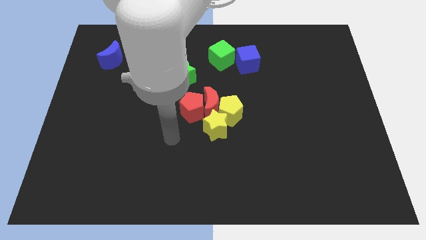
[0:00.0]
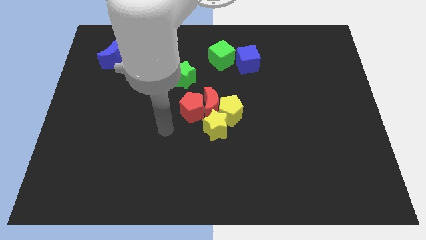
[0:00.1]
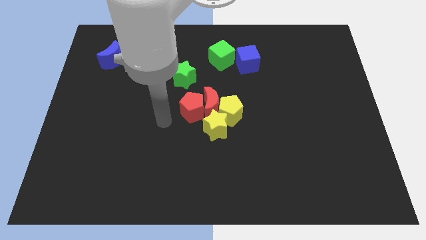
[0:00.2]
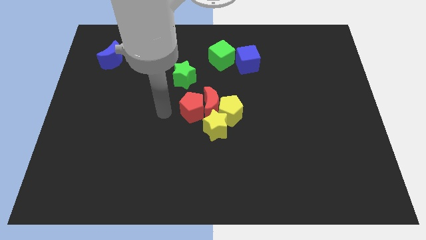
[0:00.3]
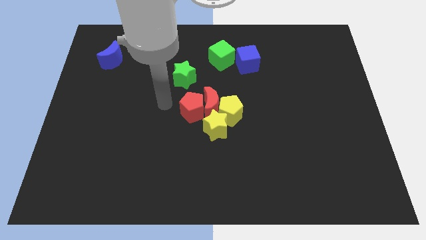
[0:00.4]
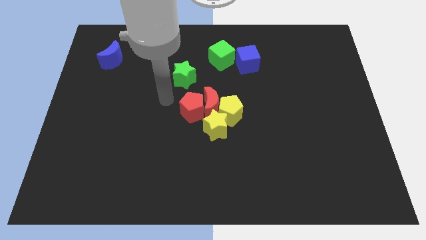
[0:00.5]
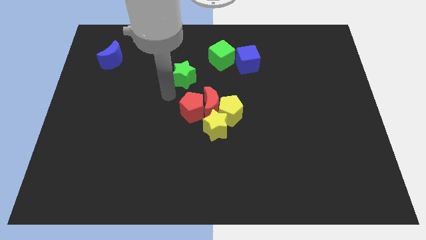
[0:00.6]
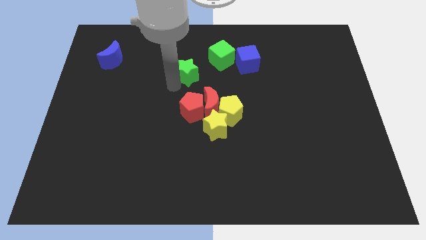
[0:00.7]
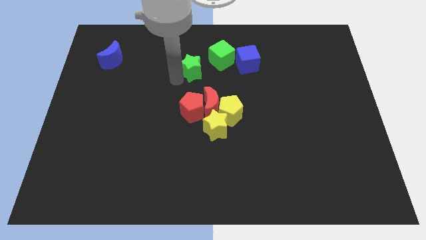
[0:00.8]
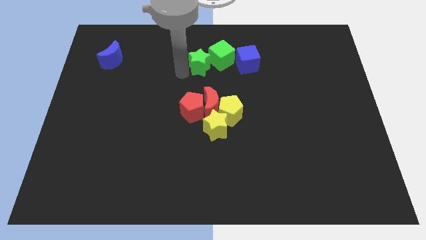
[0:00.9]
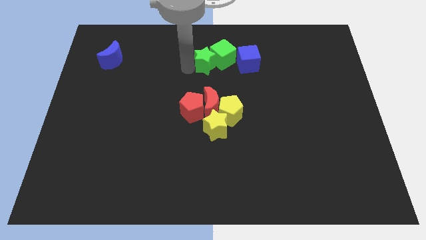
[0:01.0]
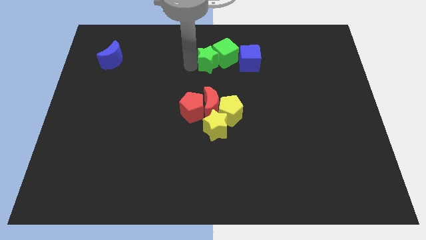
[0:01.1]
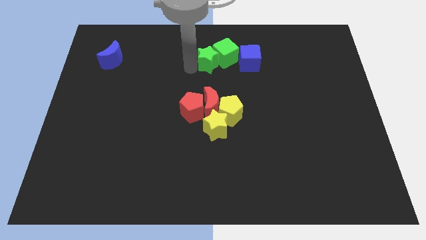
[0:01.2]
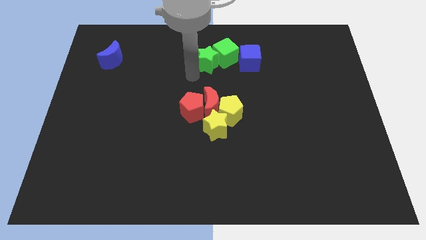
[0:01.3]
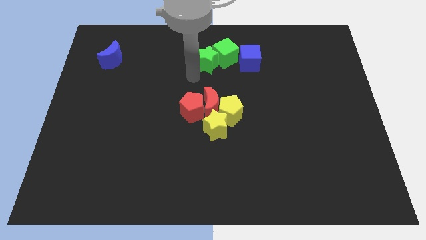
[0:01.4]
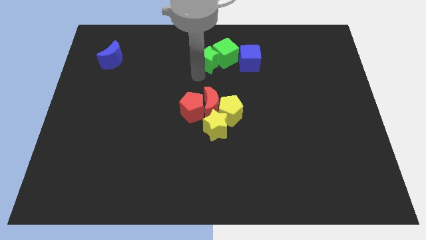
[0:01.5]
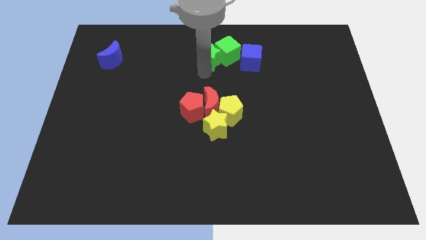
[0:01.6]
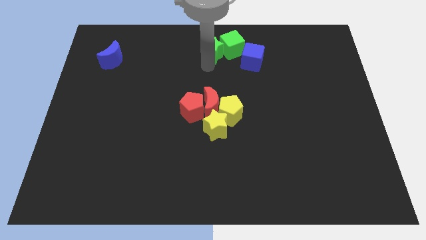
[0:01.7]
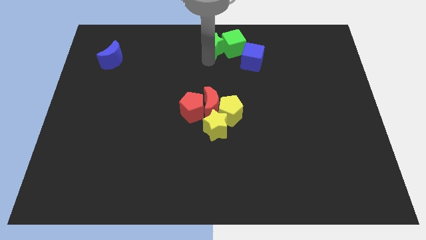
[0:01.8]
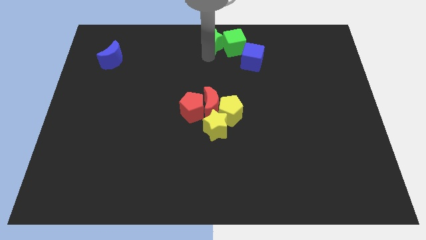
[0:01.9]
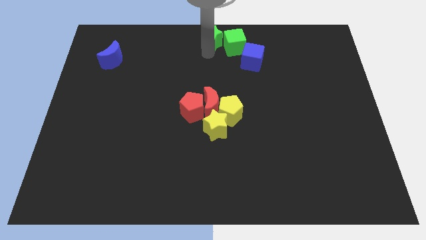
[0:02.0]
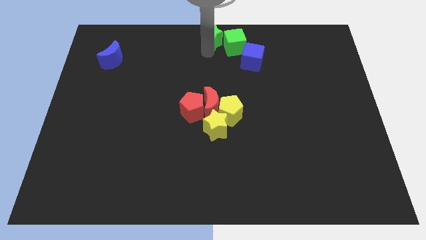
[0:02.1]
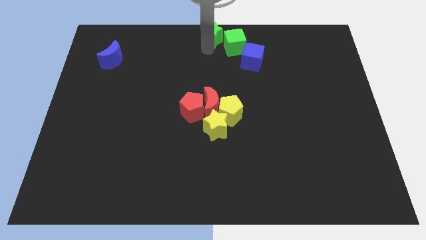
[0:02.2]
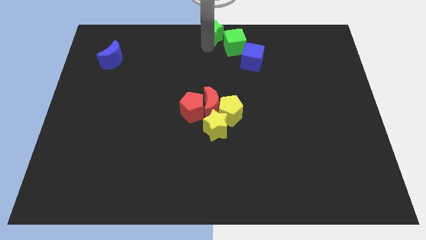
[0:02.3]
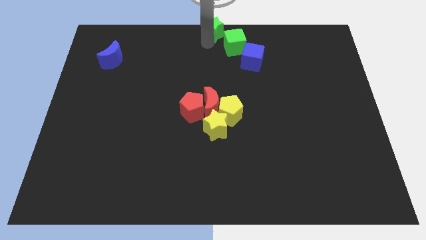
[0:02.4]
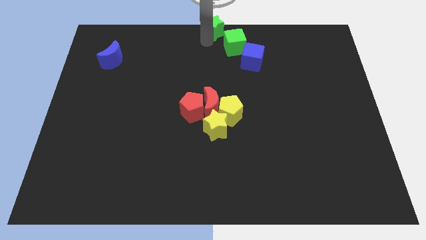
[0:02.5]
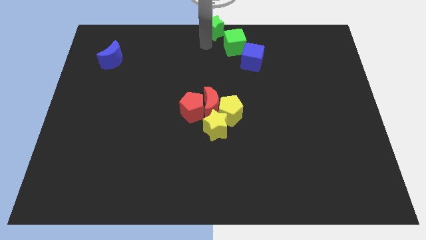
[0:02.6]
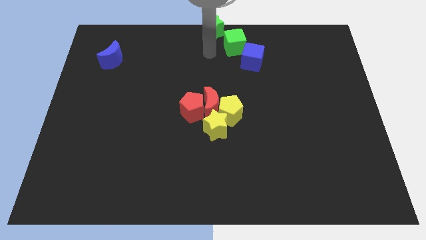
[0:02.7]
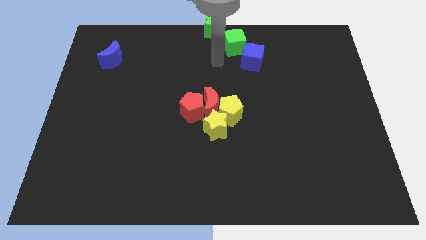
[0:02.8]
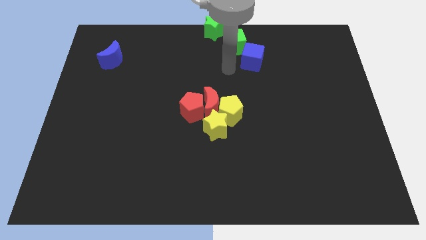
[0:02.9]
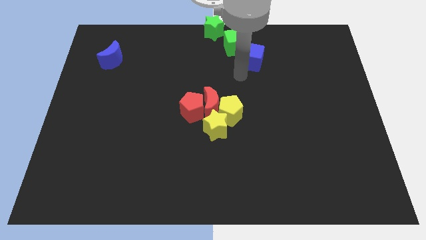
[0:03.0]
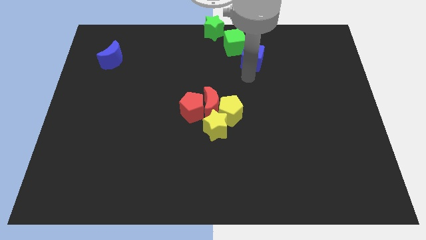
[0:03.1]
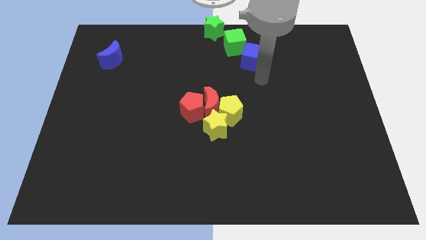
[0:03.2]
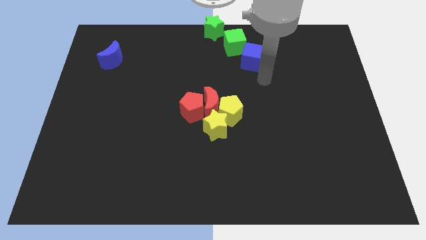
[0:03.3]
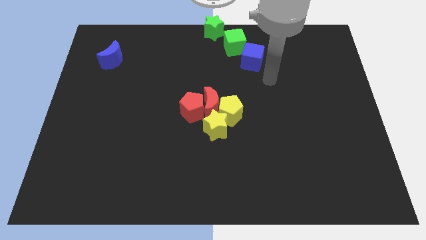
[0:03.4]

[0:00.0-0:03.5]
move green star to the top middle

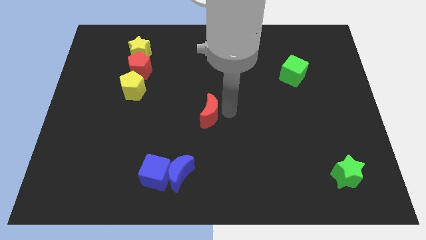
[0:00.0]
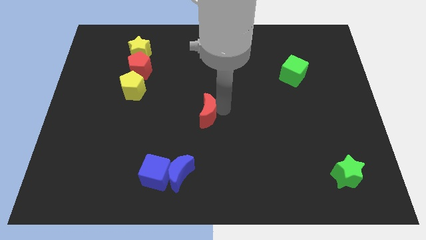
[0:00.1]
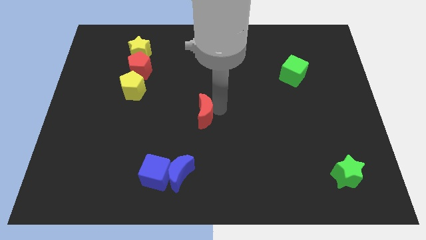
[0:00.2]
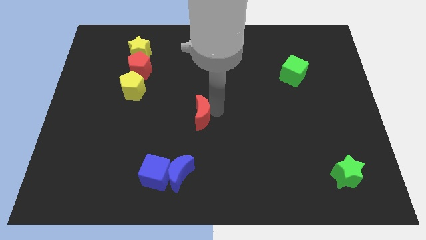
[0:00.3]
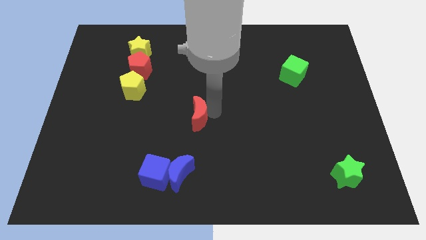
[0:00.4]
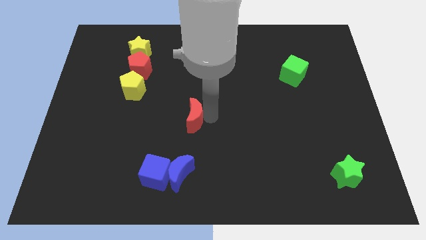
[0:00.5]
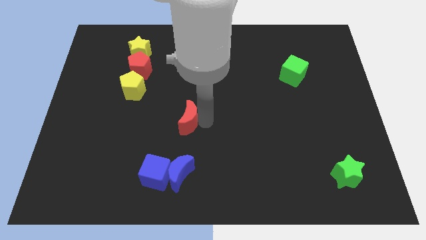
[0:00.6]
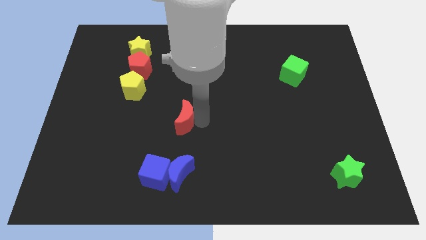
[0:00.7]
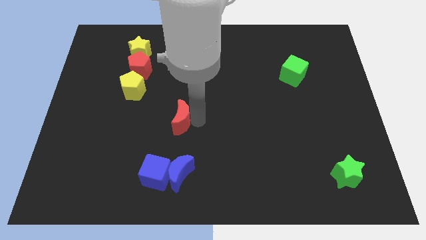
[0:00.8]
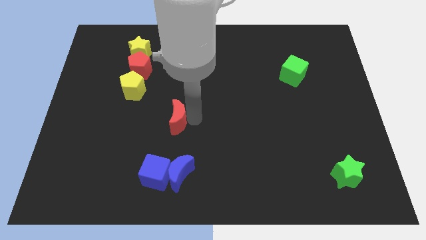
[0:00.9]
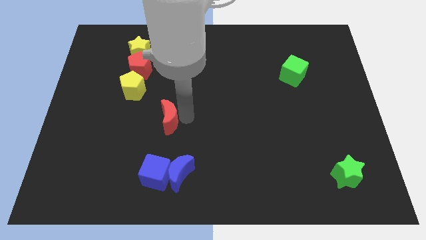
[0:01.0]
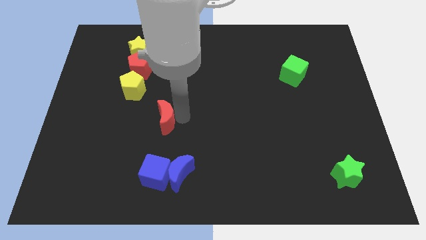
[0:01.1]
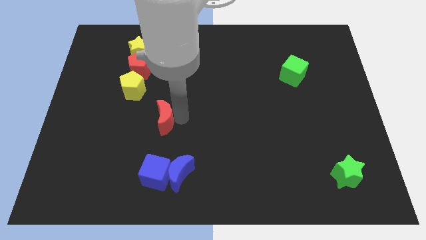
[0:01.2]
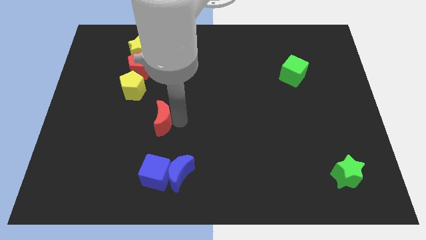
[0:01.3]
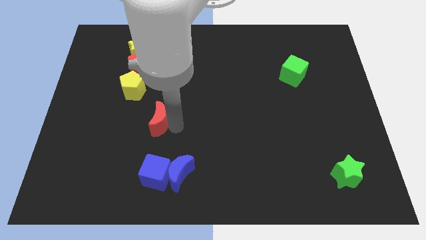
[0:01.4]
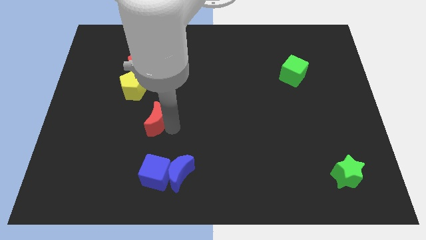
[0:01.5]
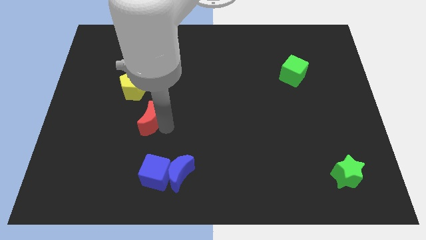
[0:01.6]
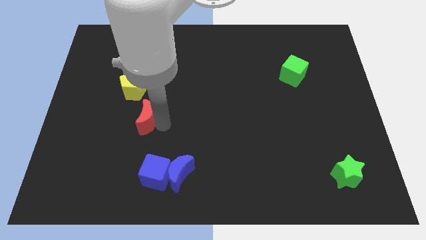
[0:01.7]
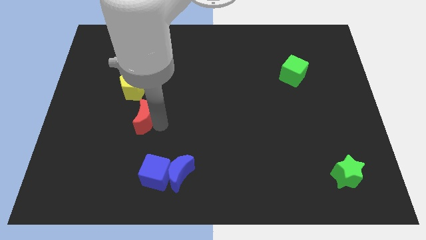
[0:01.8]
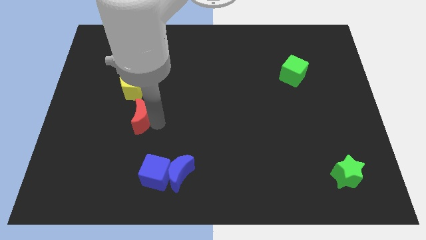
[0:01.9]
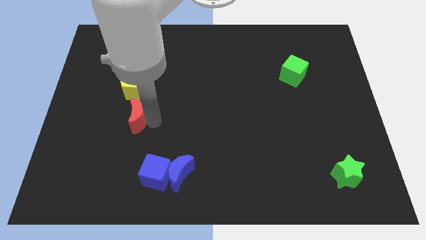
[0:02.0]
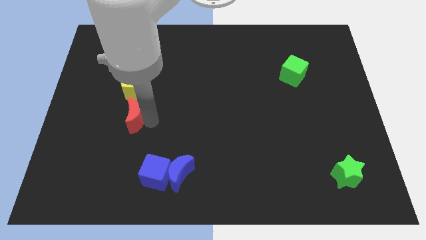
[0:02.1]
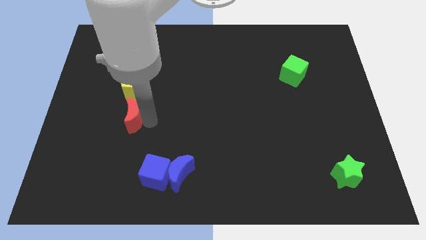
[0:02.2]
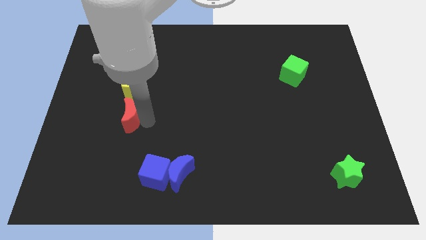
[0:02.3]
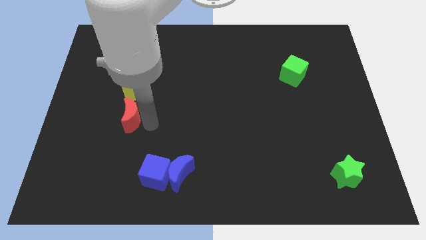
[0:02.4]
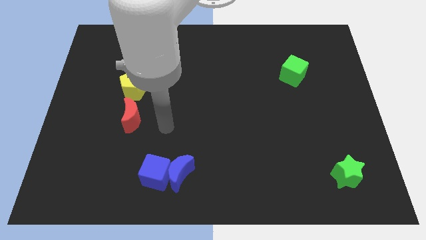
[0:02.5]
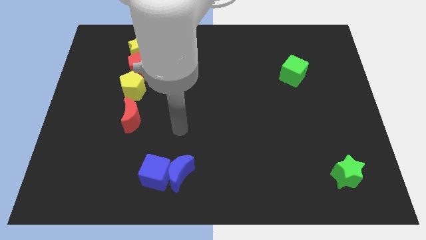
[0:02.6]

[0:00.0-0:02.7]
place the red crescent below the yellow pentagon

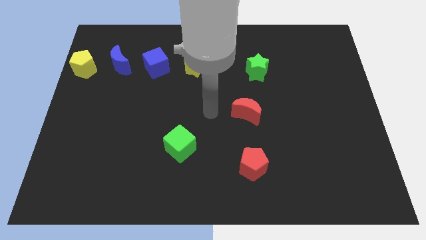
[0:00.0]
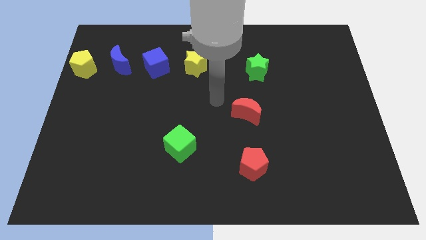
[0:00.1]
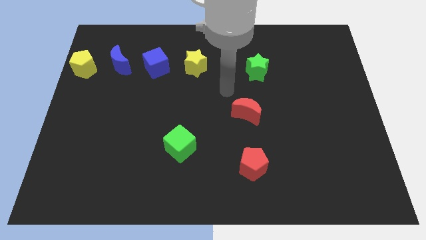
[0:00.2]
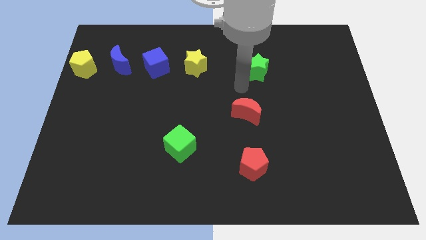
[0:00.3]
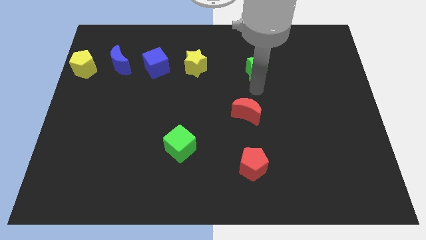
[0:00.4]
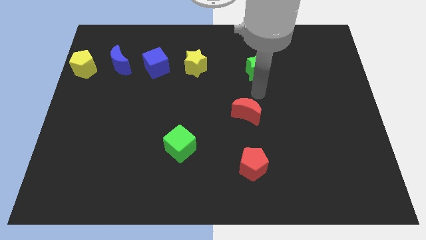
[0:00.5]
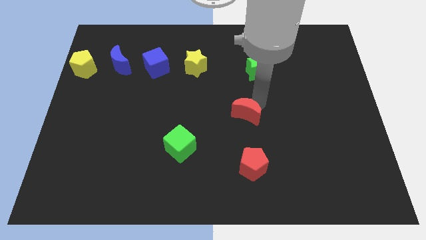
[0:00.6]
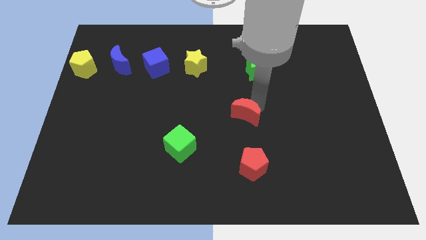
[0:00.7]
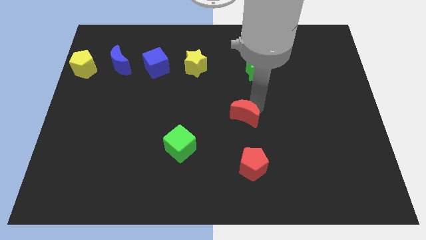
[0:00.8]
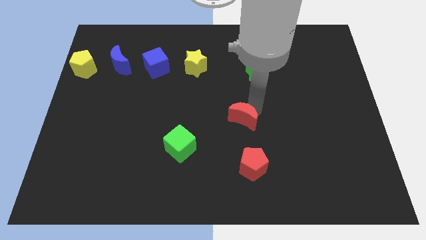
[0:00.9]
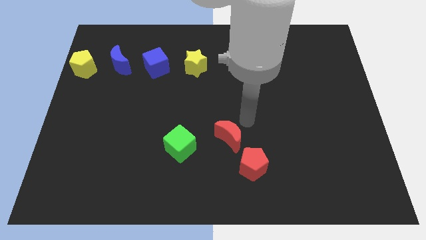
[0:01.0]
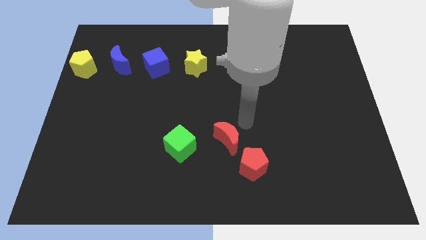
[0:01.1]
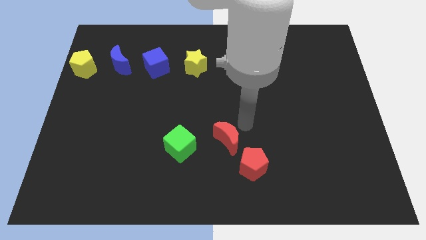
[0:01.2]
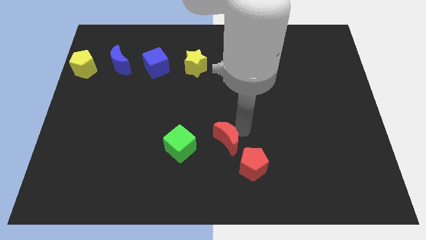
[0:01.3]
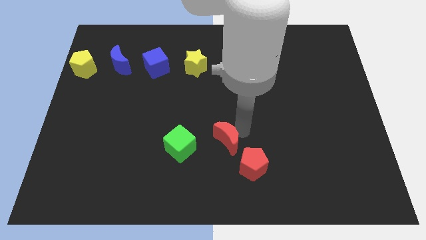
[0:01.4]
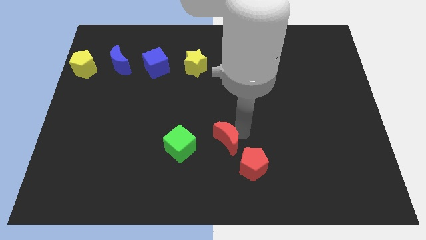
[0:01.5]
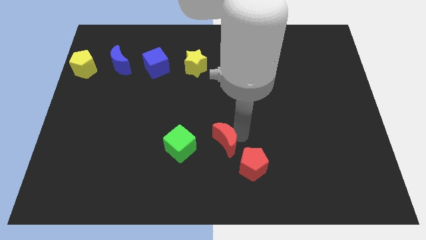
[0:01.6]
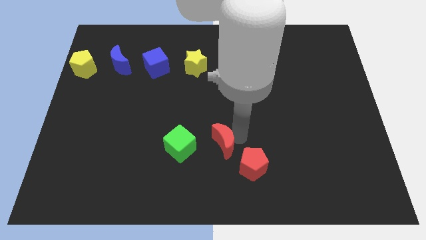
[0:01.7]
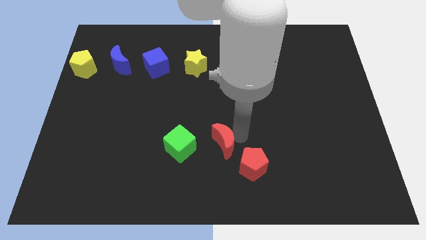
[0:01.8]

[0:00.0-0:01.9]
move the red crescent towards green cube

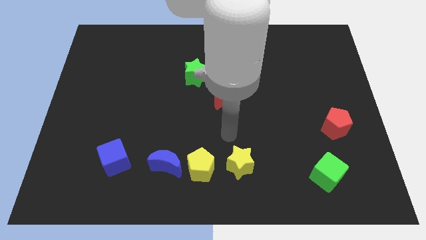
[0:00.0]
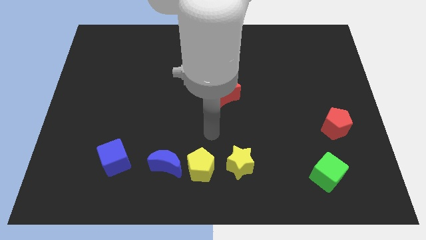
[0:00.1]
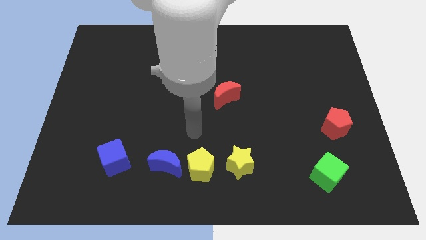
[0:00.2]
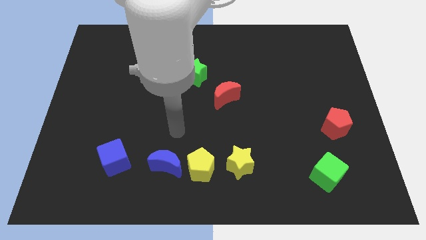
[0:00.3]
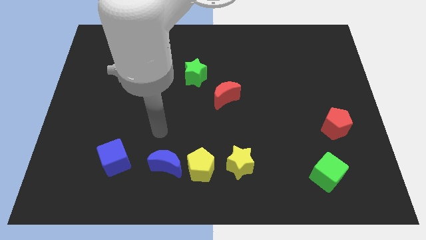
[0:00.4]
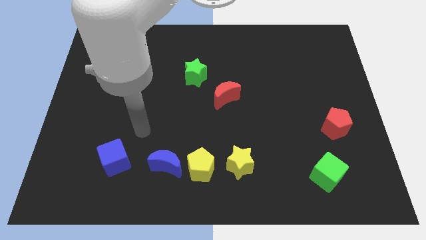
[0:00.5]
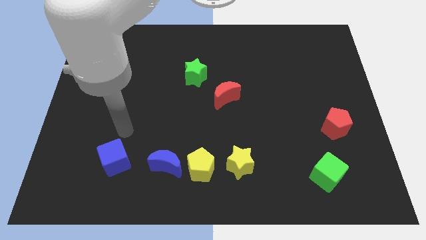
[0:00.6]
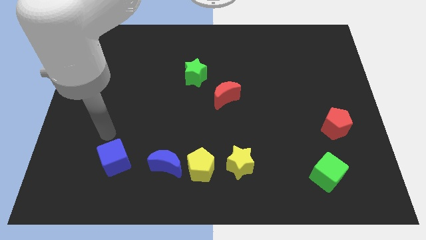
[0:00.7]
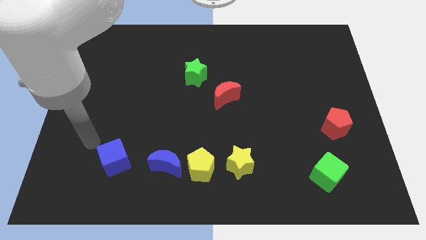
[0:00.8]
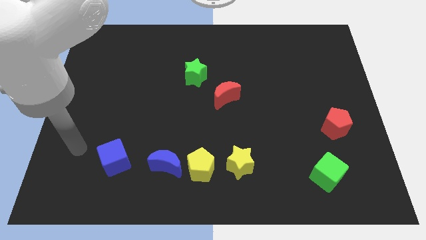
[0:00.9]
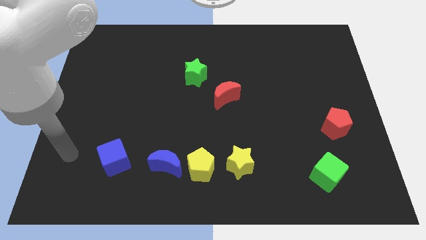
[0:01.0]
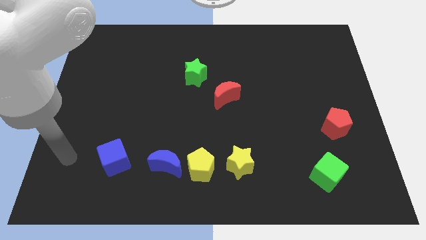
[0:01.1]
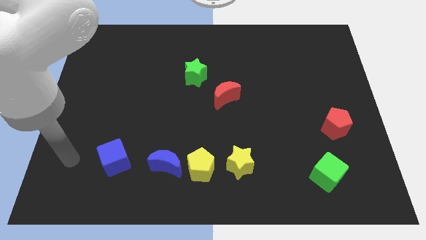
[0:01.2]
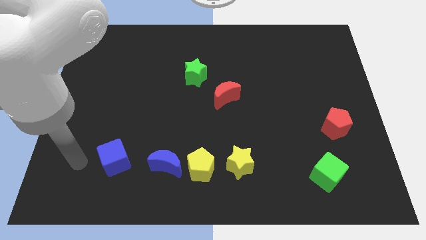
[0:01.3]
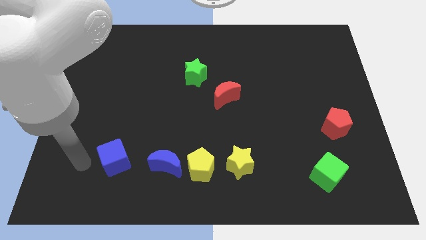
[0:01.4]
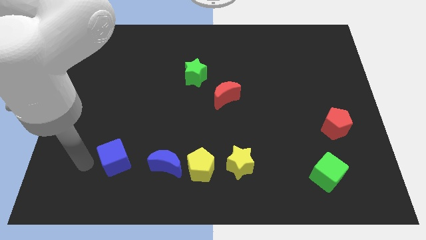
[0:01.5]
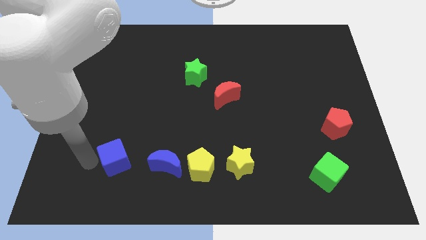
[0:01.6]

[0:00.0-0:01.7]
move your arm around the blue cube
